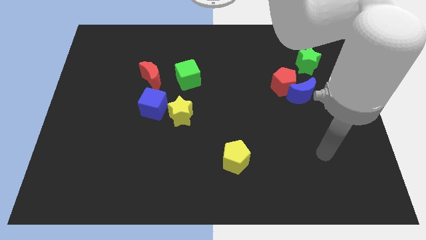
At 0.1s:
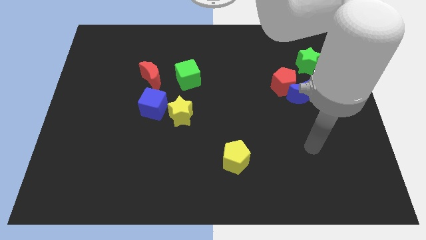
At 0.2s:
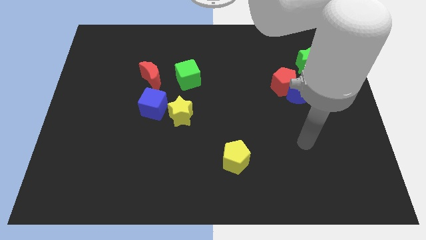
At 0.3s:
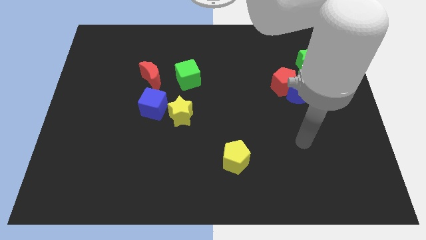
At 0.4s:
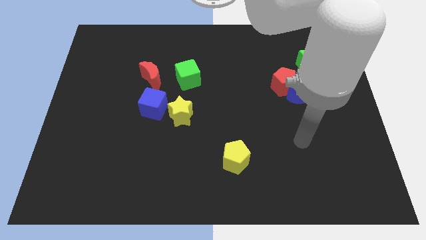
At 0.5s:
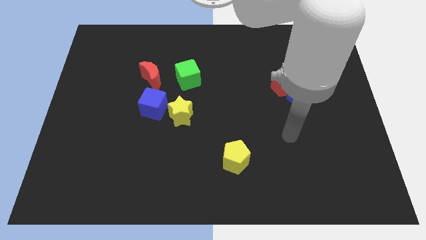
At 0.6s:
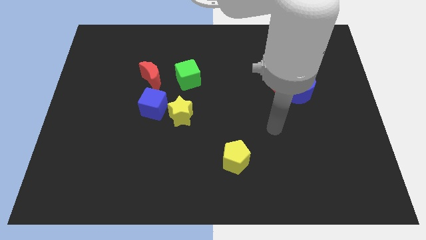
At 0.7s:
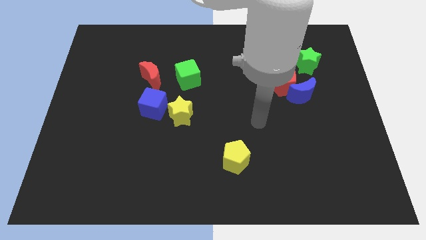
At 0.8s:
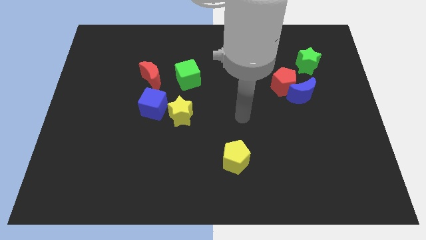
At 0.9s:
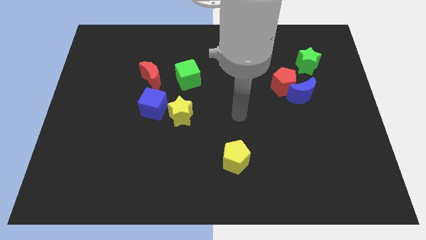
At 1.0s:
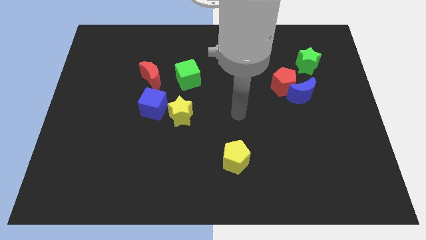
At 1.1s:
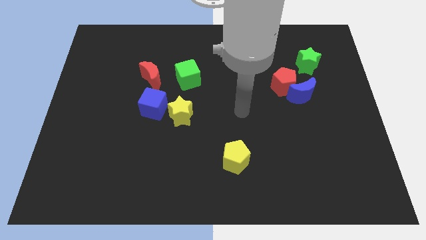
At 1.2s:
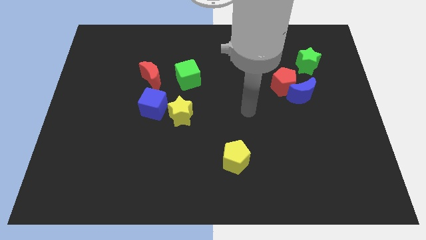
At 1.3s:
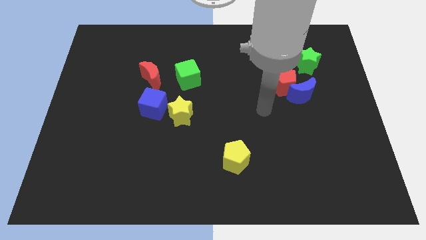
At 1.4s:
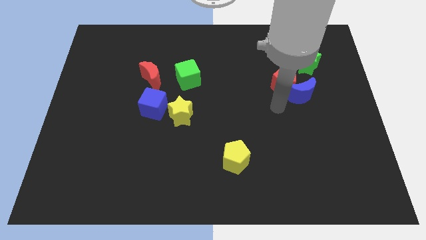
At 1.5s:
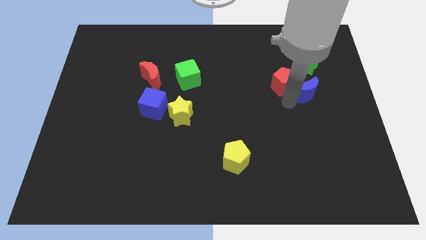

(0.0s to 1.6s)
point your hand at the bottom left side of the blue moon

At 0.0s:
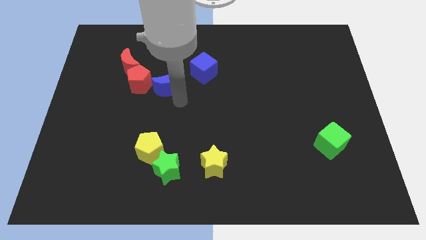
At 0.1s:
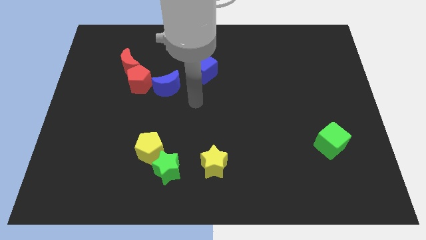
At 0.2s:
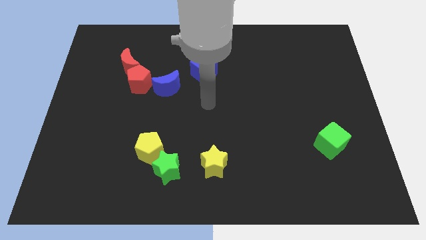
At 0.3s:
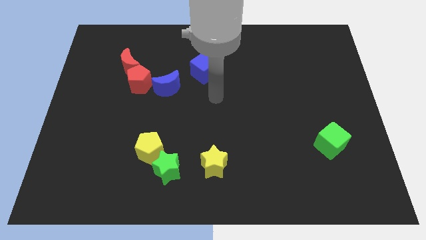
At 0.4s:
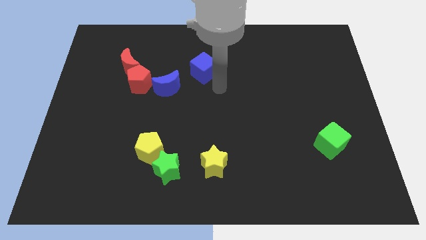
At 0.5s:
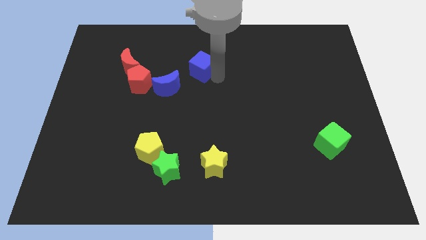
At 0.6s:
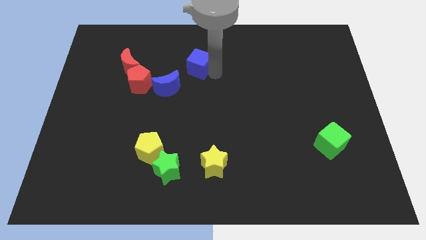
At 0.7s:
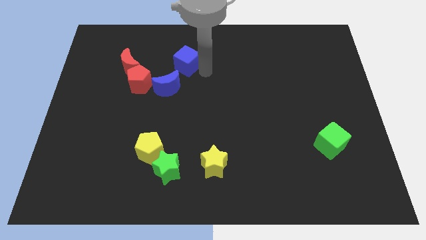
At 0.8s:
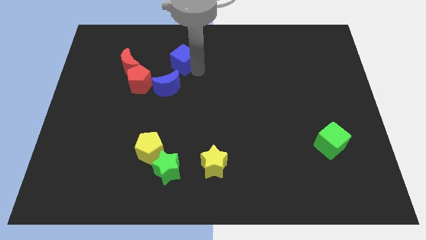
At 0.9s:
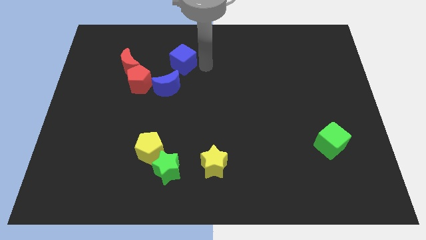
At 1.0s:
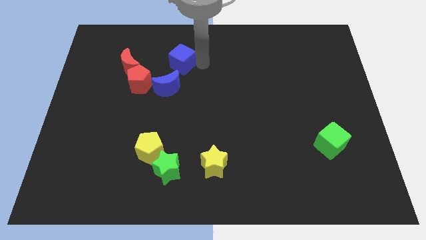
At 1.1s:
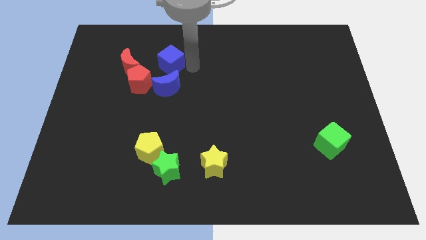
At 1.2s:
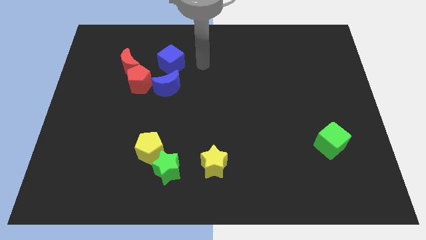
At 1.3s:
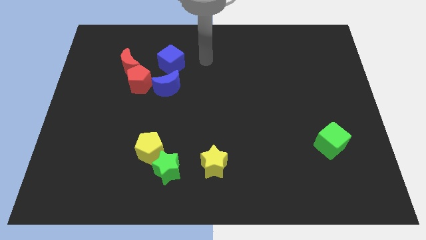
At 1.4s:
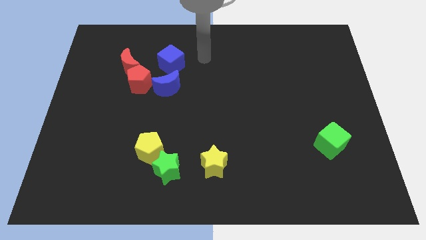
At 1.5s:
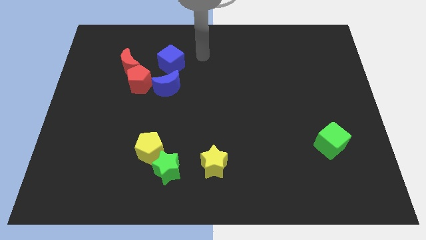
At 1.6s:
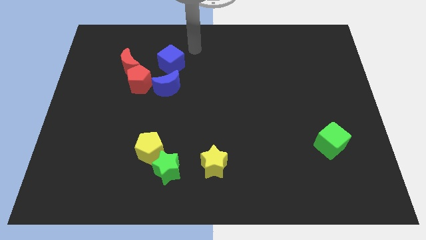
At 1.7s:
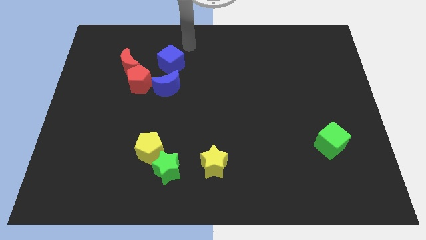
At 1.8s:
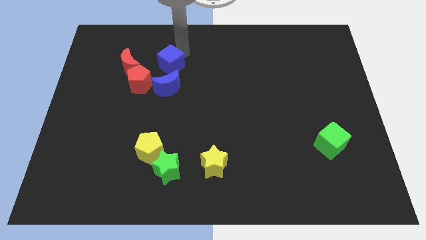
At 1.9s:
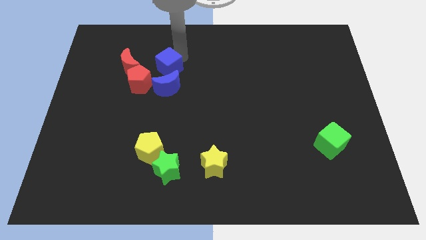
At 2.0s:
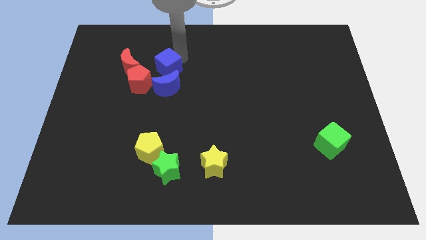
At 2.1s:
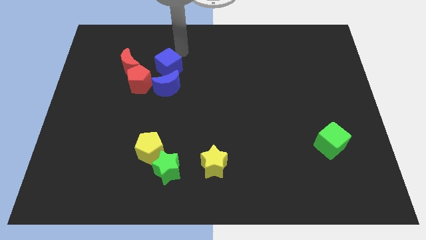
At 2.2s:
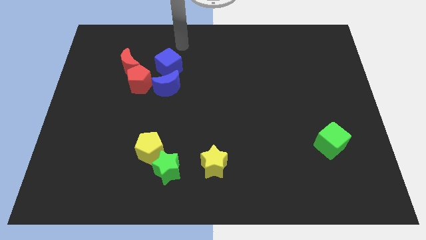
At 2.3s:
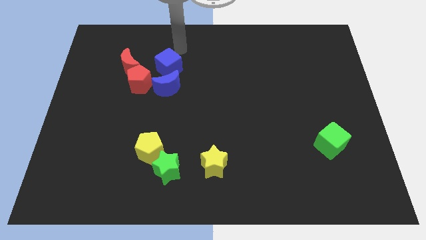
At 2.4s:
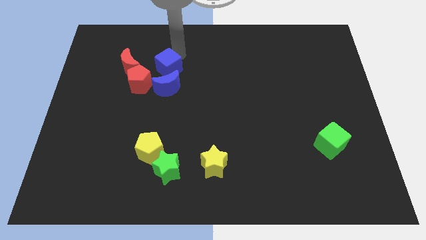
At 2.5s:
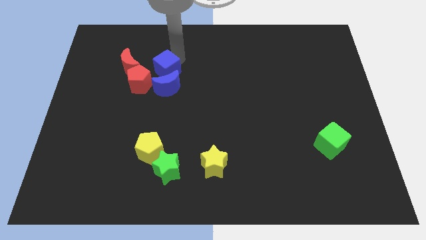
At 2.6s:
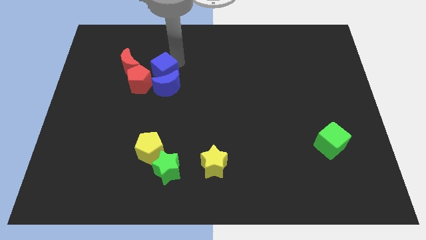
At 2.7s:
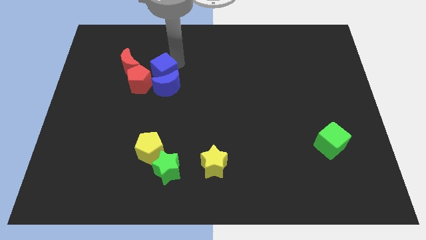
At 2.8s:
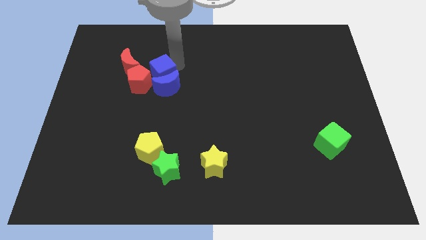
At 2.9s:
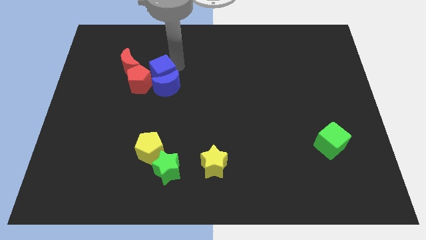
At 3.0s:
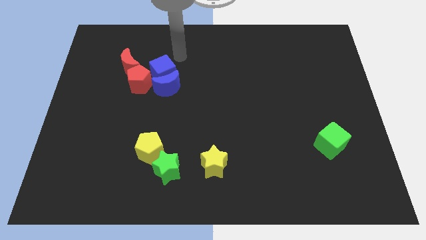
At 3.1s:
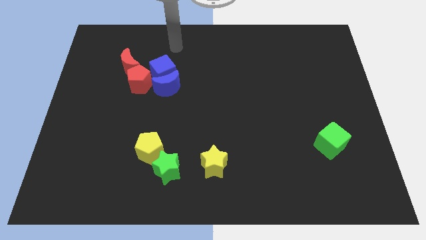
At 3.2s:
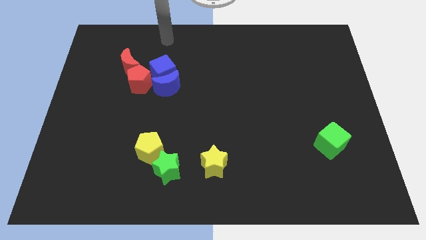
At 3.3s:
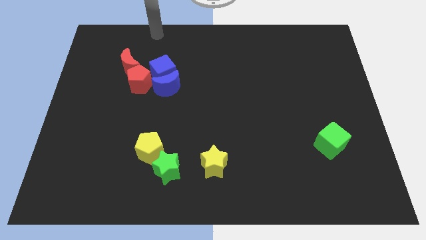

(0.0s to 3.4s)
place the blue cube above the yellow pentagon

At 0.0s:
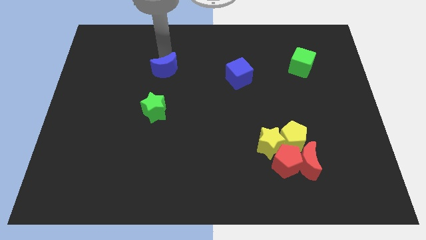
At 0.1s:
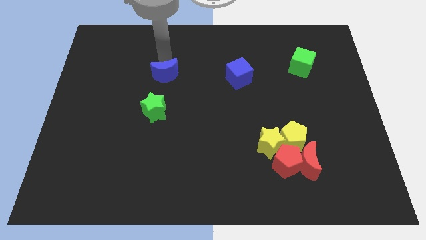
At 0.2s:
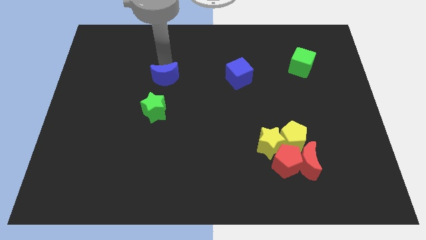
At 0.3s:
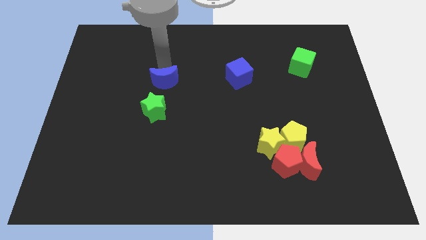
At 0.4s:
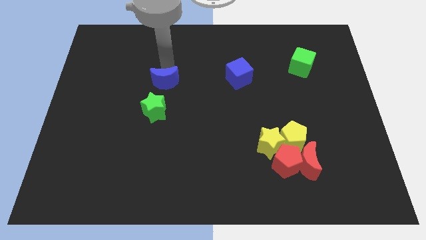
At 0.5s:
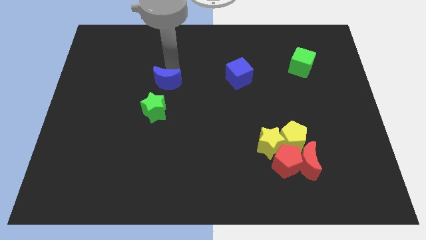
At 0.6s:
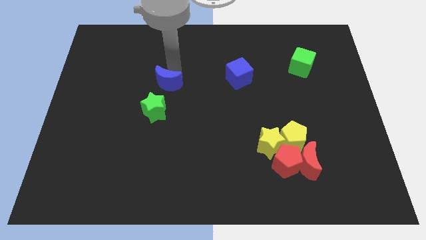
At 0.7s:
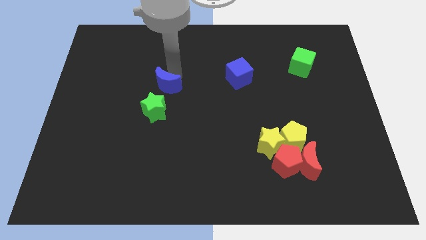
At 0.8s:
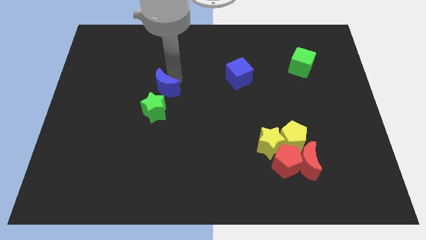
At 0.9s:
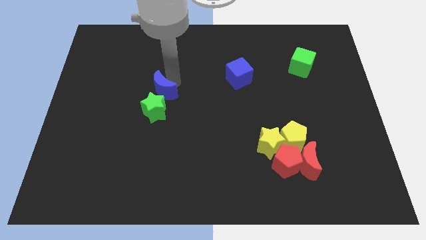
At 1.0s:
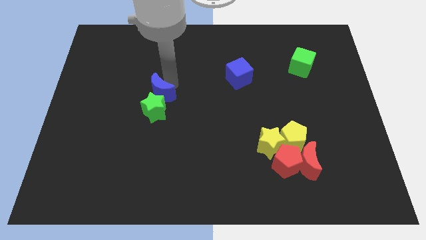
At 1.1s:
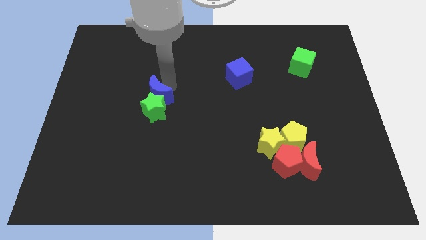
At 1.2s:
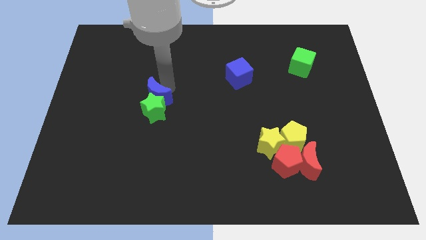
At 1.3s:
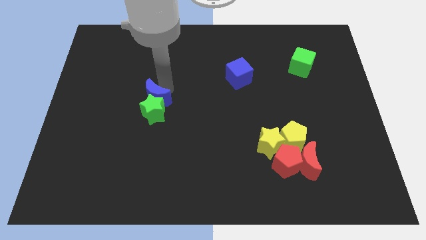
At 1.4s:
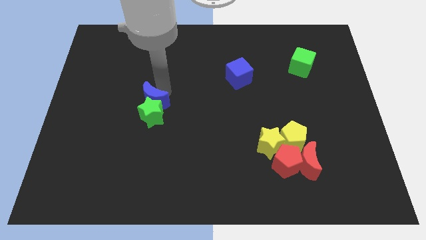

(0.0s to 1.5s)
move the blue crescent into the green star

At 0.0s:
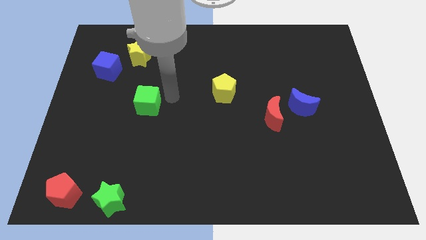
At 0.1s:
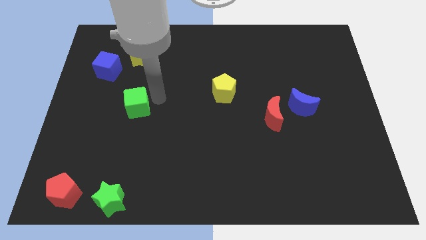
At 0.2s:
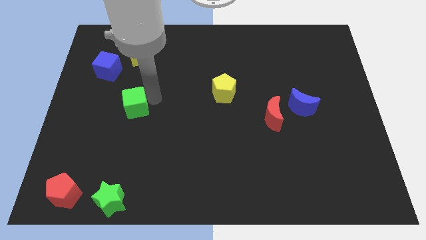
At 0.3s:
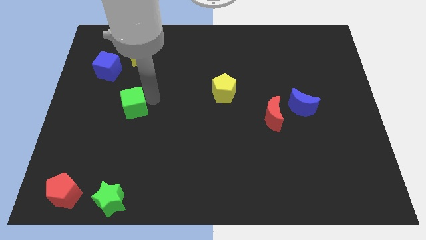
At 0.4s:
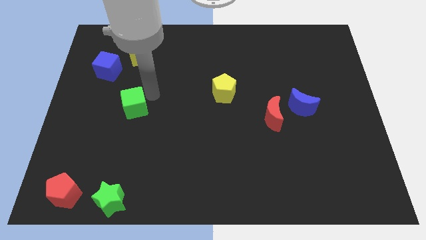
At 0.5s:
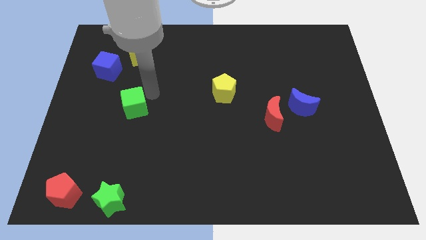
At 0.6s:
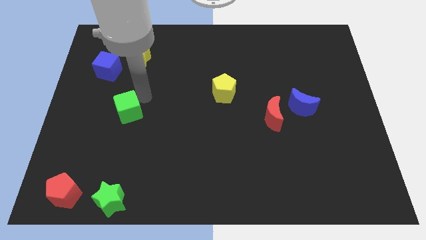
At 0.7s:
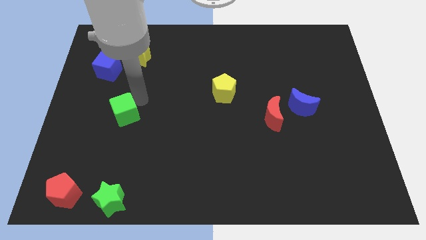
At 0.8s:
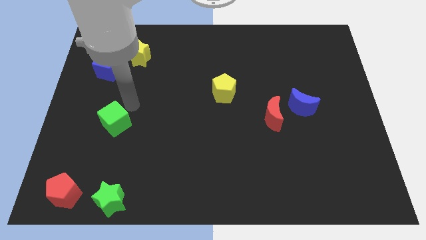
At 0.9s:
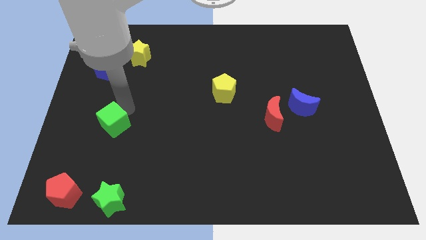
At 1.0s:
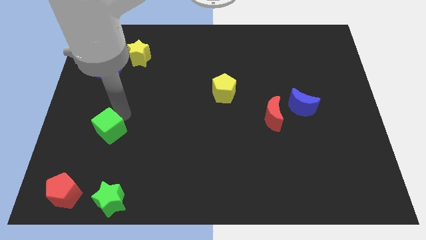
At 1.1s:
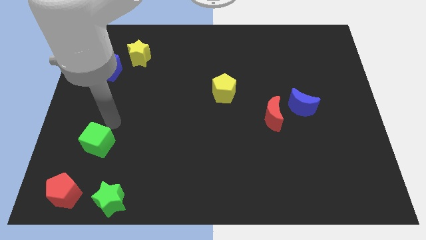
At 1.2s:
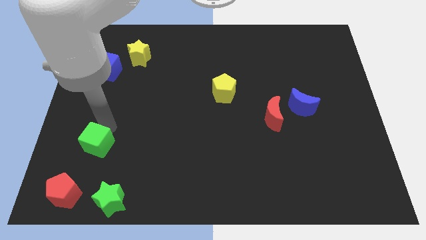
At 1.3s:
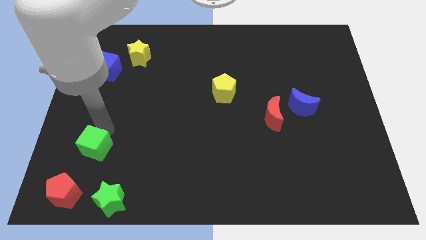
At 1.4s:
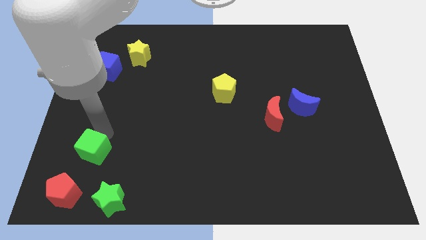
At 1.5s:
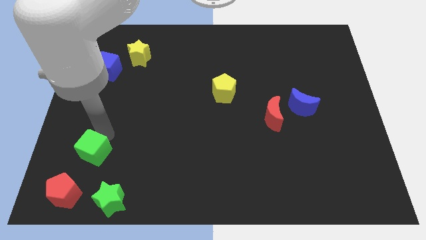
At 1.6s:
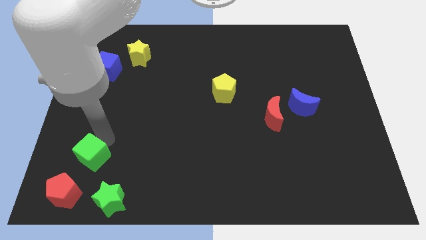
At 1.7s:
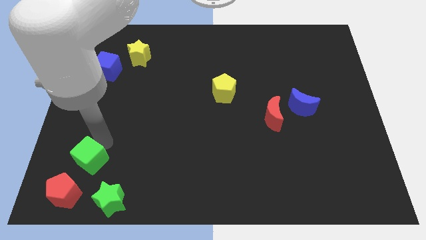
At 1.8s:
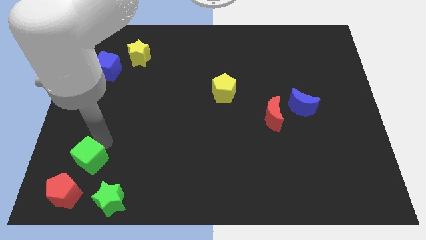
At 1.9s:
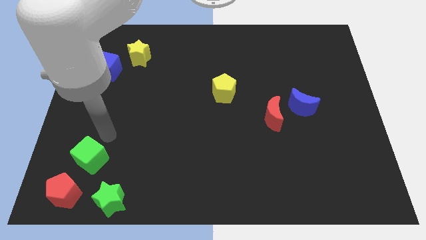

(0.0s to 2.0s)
push the green cube at the top left of the green star

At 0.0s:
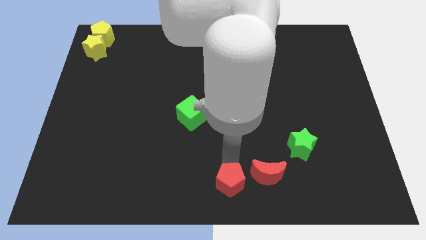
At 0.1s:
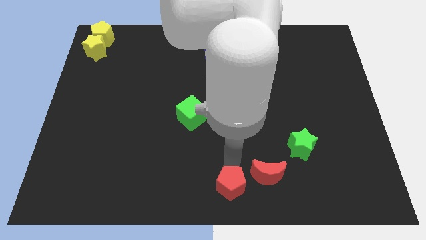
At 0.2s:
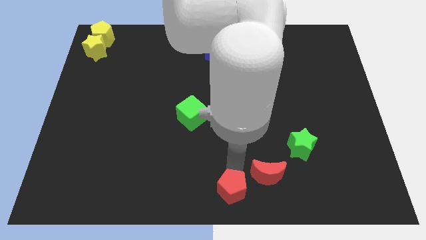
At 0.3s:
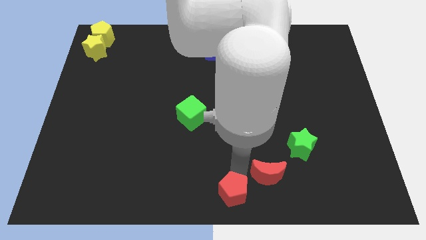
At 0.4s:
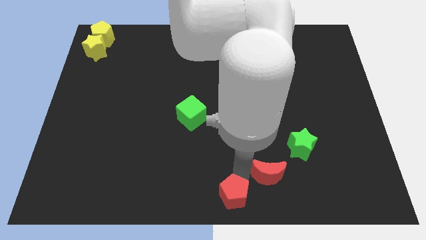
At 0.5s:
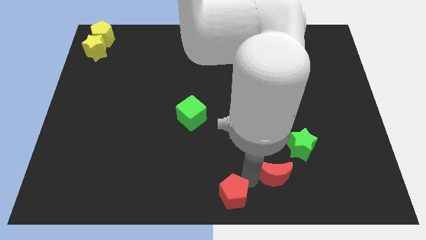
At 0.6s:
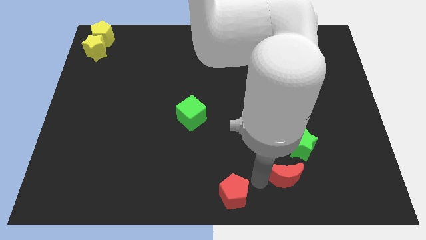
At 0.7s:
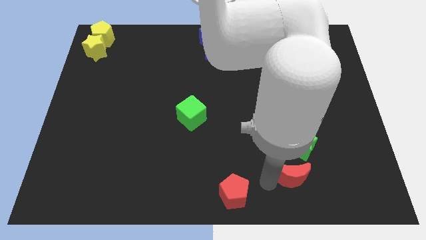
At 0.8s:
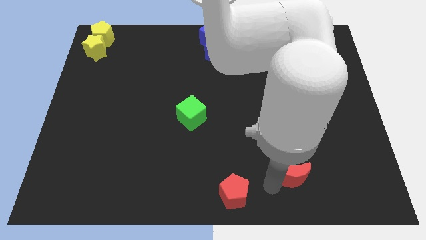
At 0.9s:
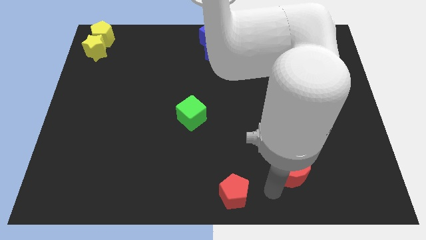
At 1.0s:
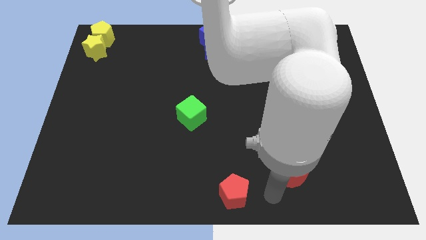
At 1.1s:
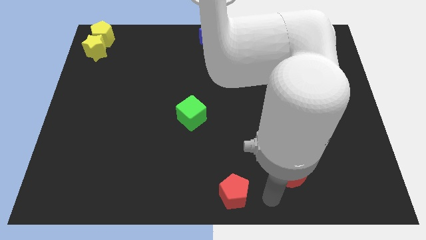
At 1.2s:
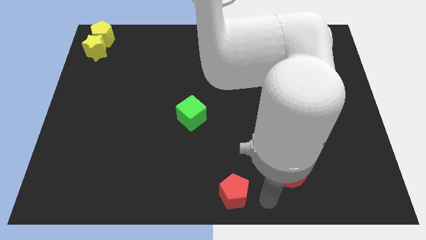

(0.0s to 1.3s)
slightly push the red pentagon on the board
